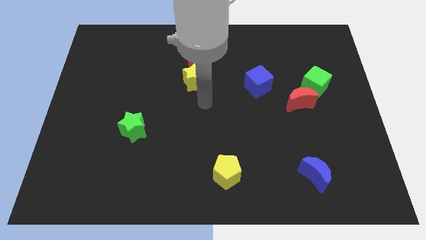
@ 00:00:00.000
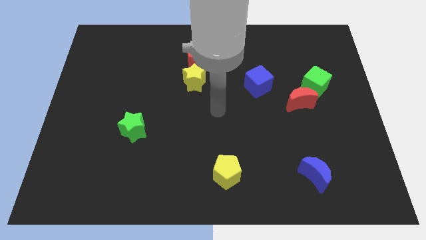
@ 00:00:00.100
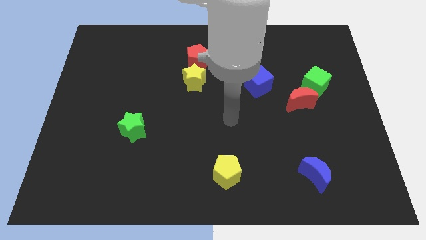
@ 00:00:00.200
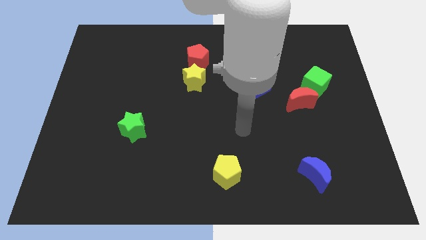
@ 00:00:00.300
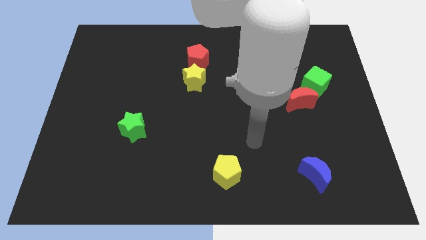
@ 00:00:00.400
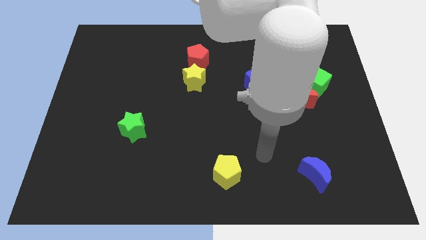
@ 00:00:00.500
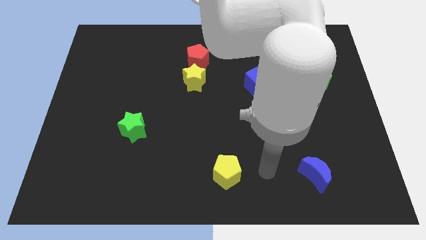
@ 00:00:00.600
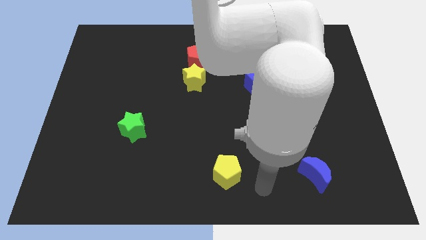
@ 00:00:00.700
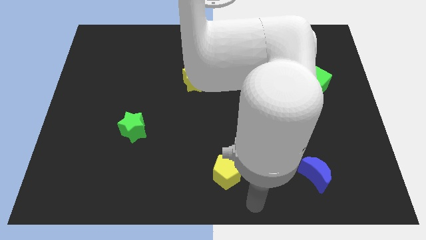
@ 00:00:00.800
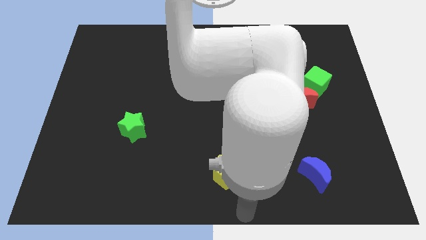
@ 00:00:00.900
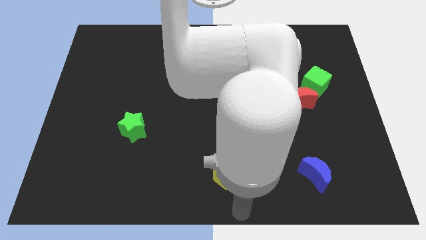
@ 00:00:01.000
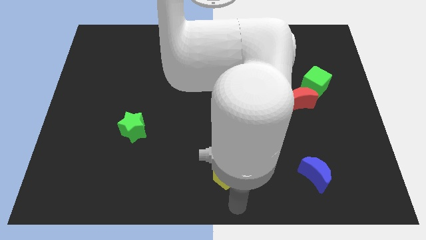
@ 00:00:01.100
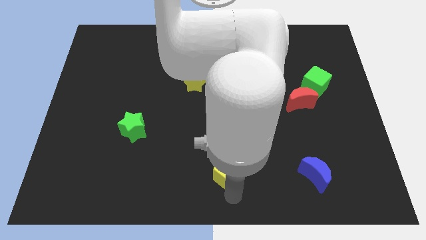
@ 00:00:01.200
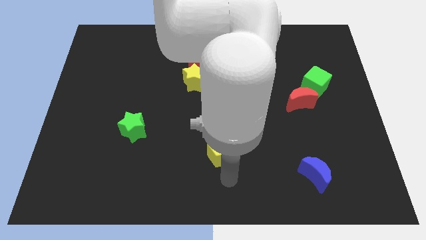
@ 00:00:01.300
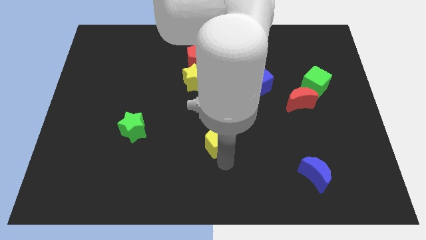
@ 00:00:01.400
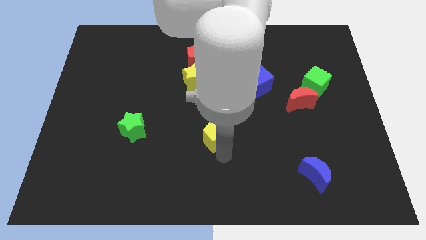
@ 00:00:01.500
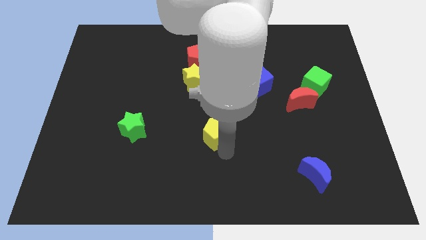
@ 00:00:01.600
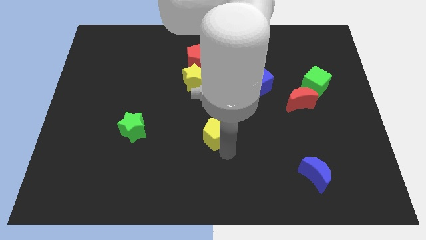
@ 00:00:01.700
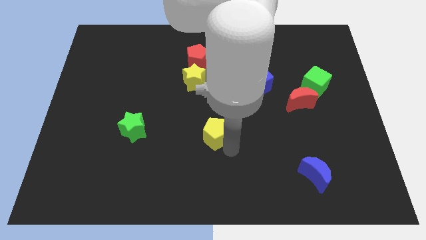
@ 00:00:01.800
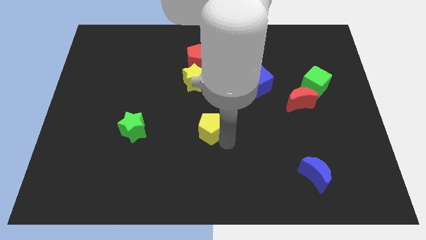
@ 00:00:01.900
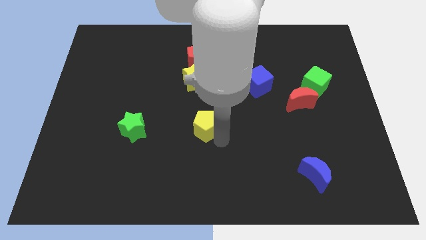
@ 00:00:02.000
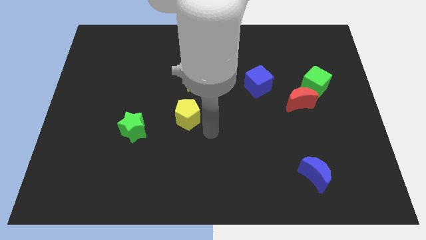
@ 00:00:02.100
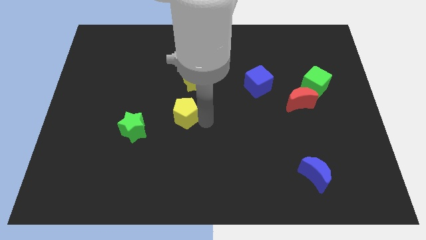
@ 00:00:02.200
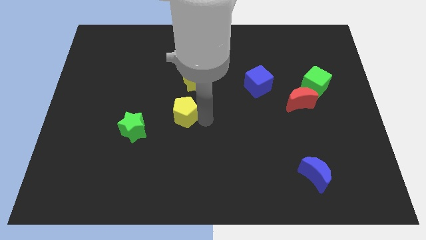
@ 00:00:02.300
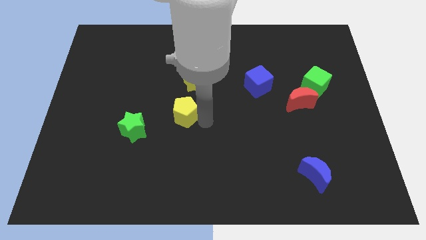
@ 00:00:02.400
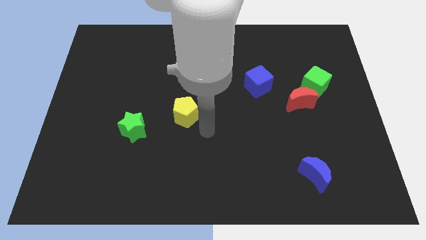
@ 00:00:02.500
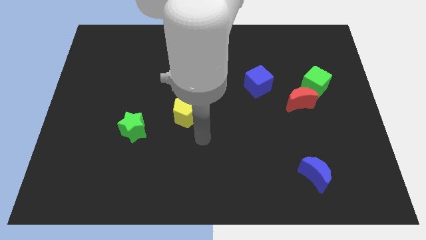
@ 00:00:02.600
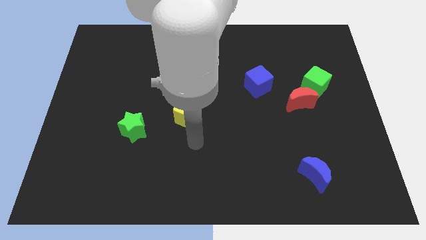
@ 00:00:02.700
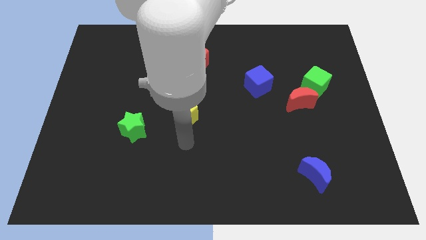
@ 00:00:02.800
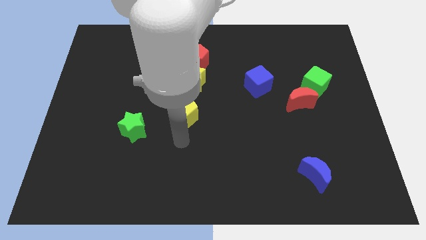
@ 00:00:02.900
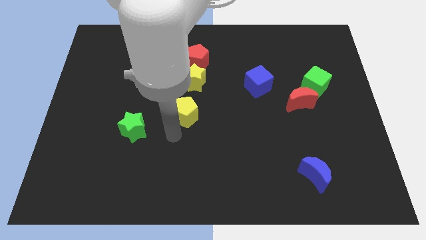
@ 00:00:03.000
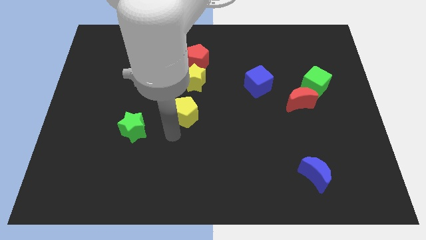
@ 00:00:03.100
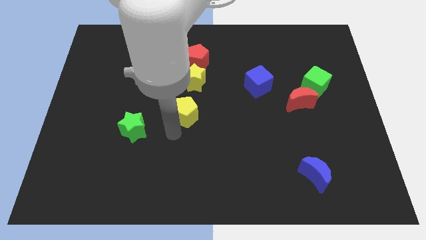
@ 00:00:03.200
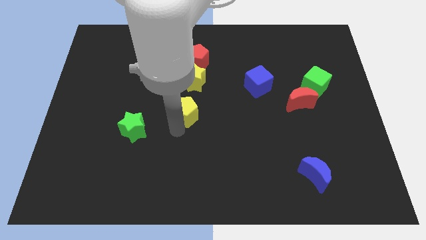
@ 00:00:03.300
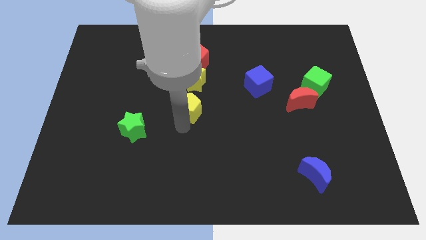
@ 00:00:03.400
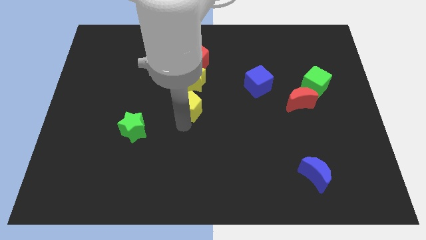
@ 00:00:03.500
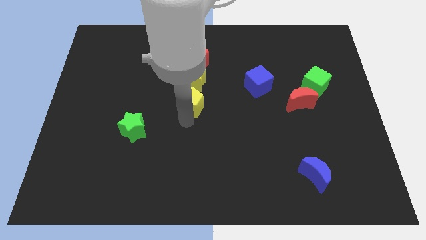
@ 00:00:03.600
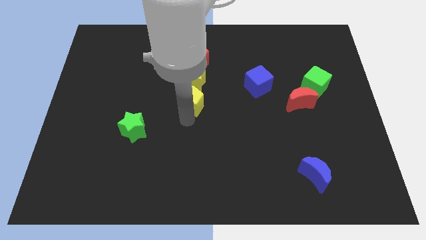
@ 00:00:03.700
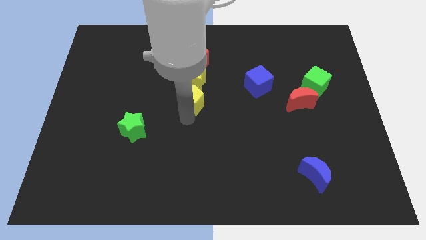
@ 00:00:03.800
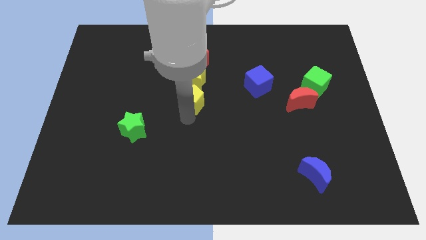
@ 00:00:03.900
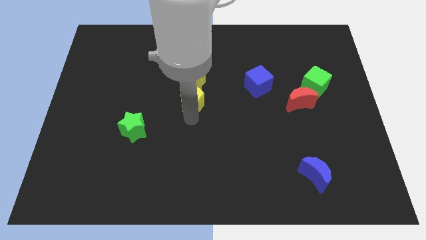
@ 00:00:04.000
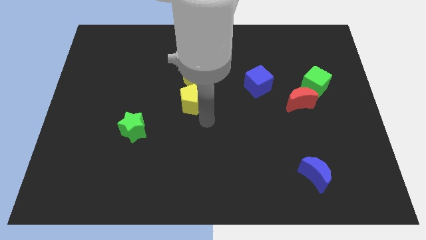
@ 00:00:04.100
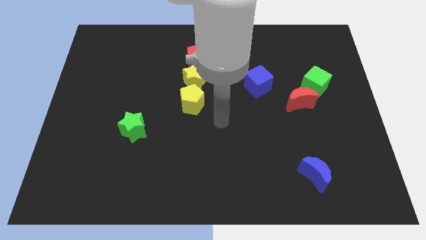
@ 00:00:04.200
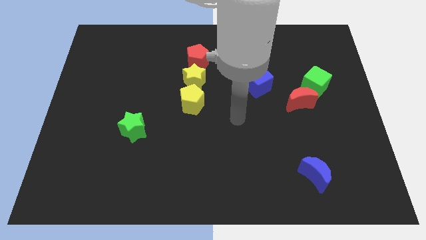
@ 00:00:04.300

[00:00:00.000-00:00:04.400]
move the yellow pentagon to the bottom side of the yellow star

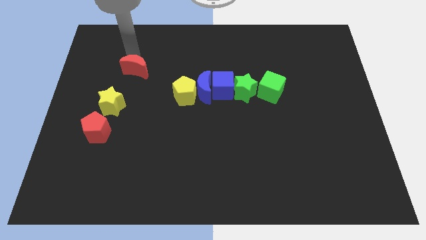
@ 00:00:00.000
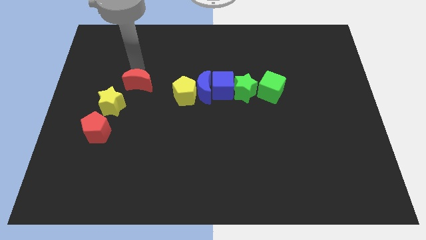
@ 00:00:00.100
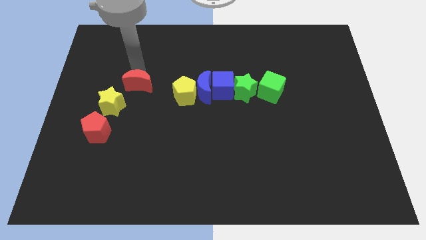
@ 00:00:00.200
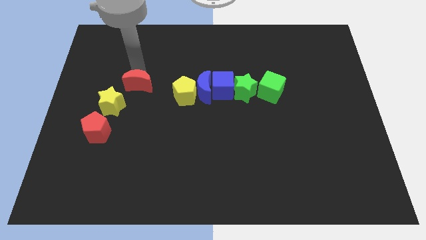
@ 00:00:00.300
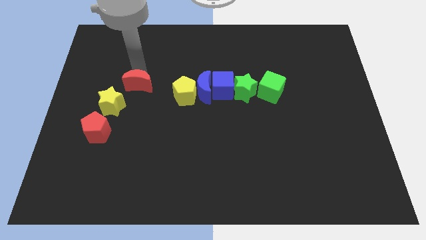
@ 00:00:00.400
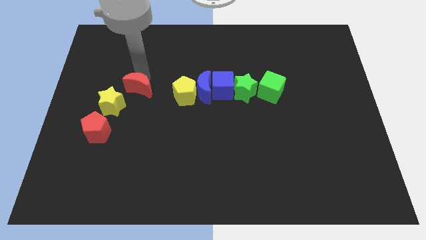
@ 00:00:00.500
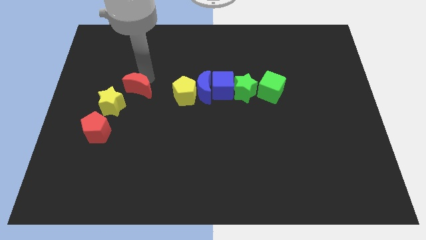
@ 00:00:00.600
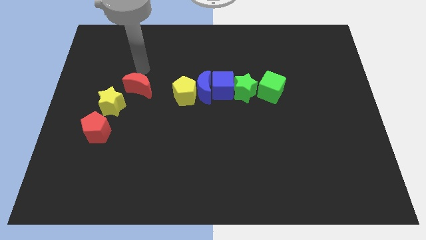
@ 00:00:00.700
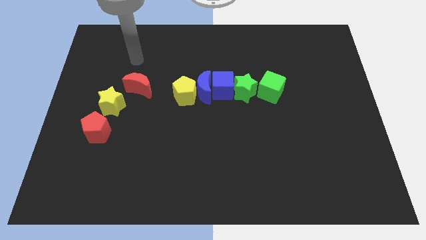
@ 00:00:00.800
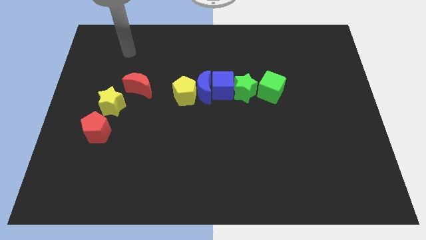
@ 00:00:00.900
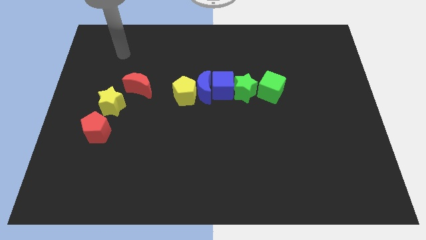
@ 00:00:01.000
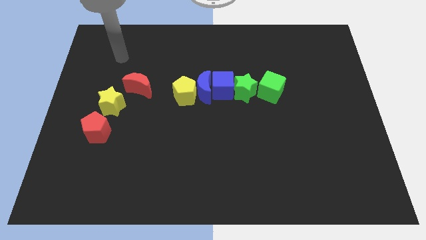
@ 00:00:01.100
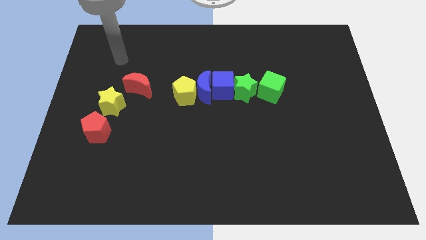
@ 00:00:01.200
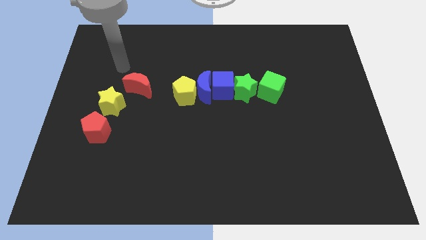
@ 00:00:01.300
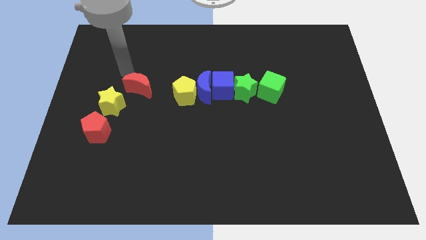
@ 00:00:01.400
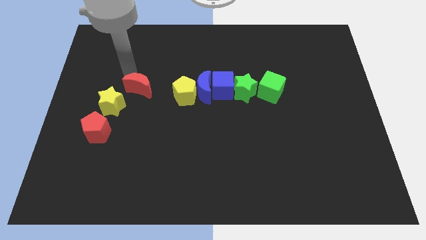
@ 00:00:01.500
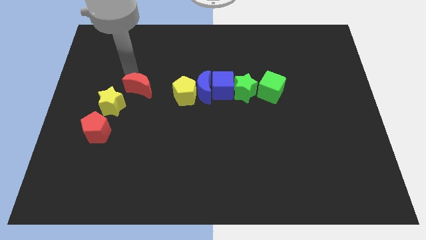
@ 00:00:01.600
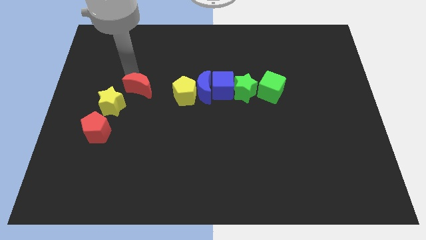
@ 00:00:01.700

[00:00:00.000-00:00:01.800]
push the red moon down slightly

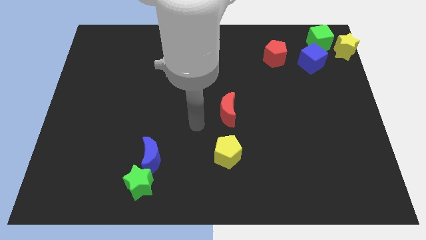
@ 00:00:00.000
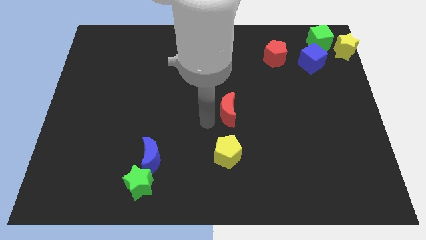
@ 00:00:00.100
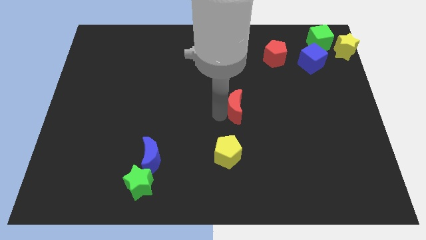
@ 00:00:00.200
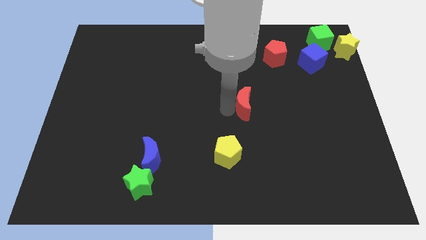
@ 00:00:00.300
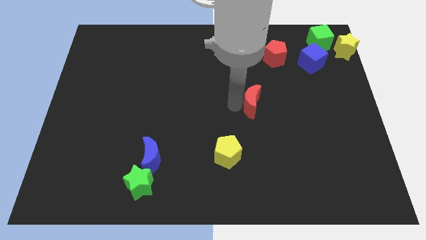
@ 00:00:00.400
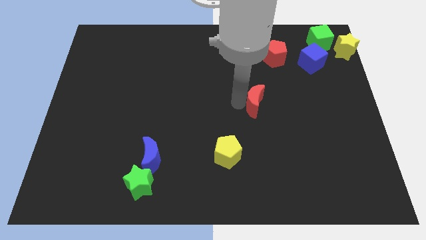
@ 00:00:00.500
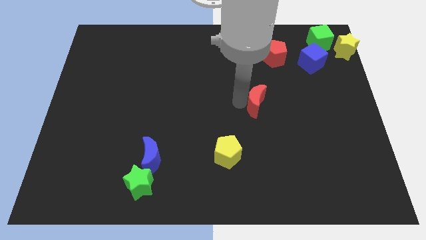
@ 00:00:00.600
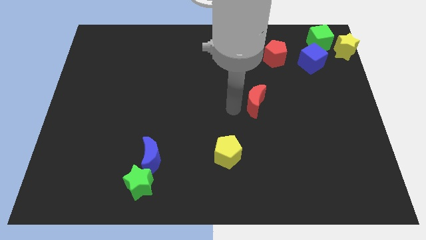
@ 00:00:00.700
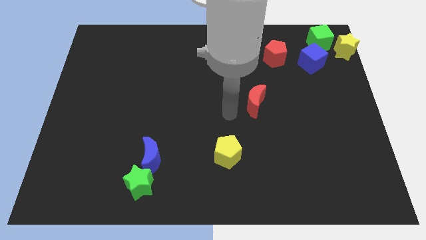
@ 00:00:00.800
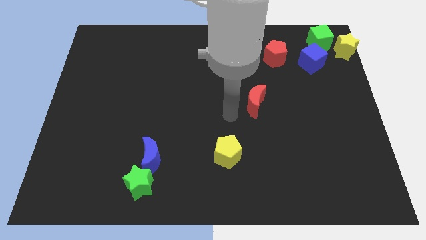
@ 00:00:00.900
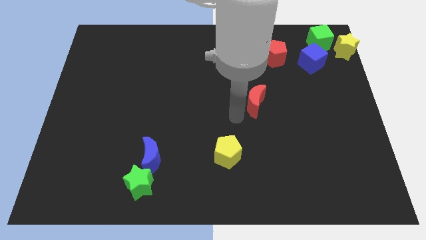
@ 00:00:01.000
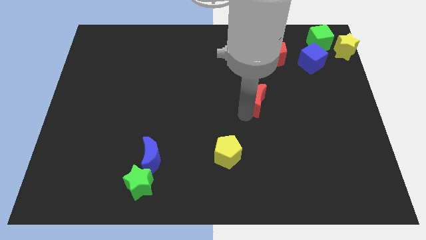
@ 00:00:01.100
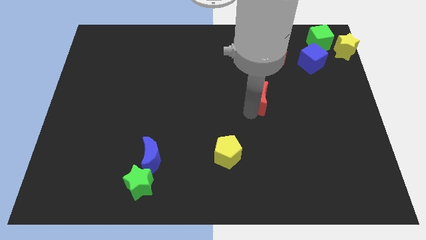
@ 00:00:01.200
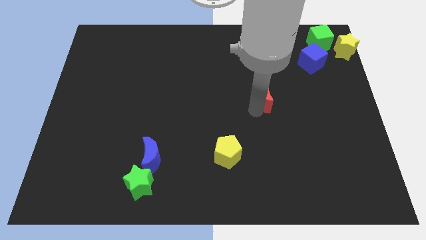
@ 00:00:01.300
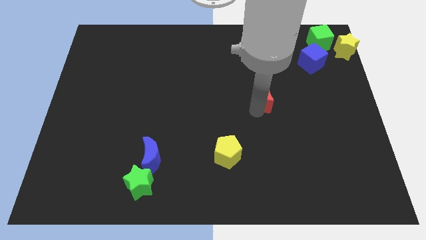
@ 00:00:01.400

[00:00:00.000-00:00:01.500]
push the red moon slightly towards the right of the board

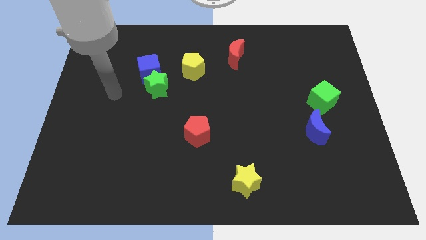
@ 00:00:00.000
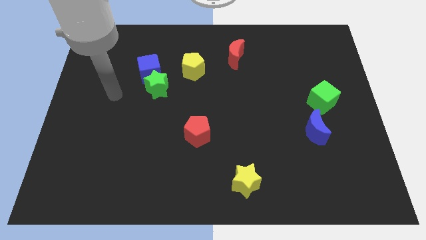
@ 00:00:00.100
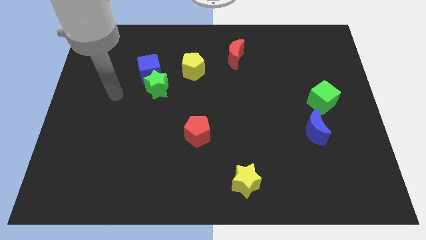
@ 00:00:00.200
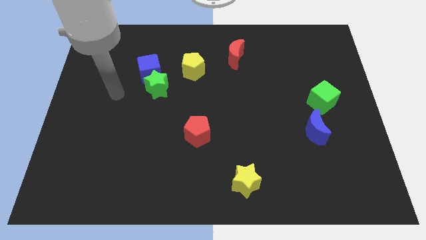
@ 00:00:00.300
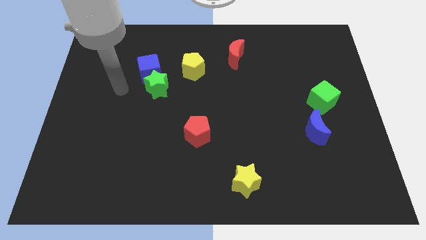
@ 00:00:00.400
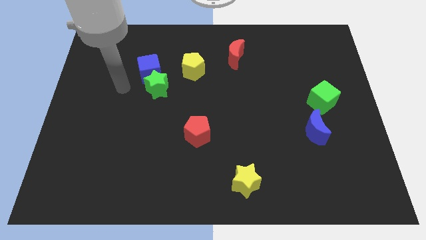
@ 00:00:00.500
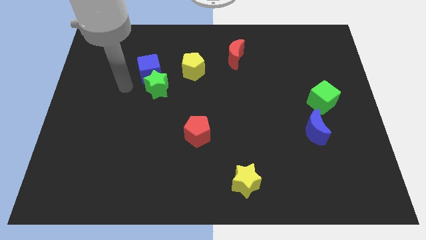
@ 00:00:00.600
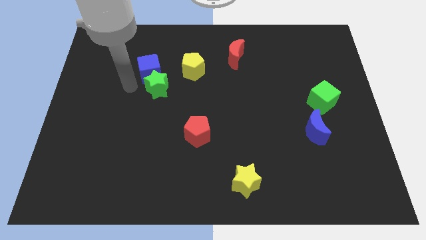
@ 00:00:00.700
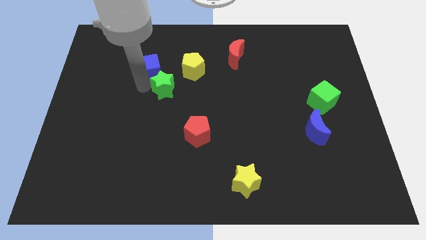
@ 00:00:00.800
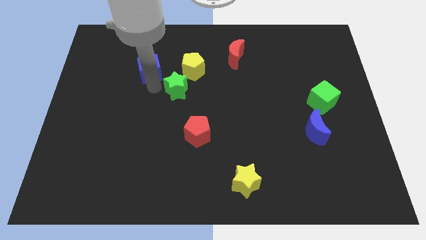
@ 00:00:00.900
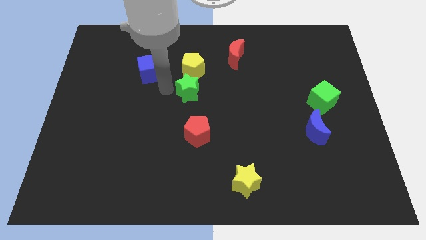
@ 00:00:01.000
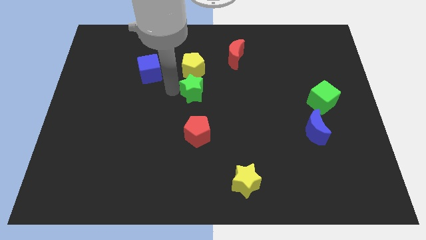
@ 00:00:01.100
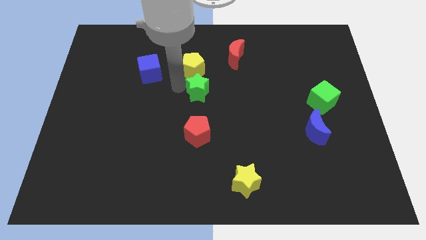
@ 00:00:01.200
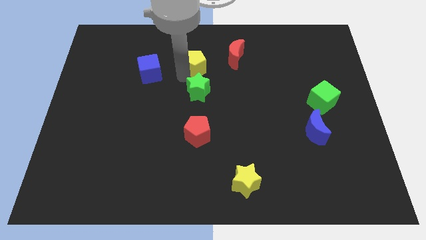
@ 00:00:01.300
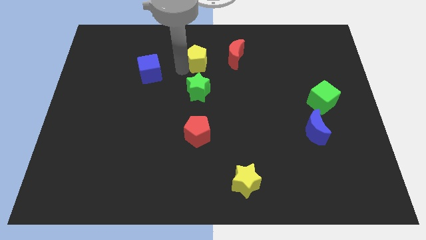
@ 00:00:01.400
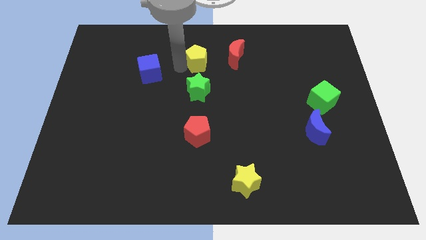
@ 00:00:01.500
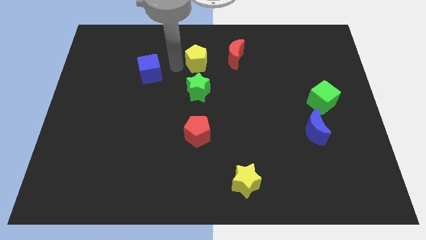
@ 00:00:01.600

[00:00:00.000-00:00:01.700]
push the green star in between the yellow pentagon and red pentagon
